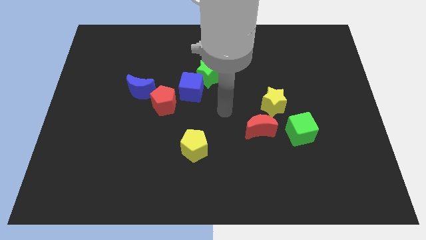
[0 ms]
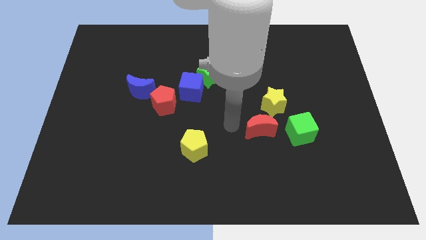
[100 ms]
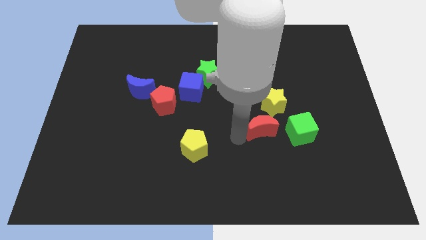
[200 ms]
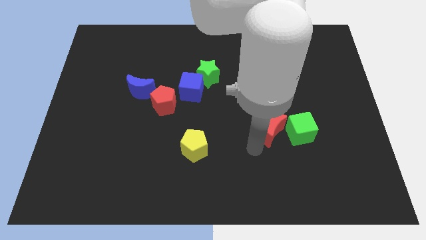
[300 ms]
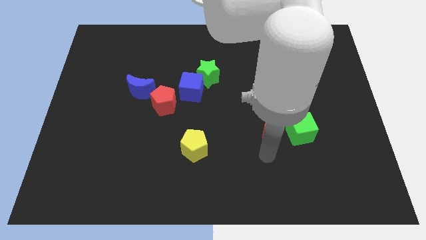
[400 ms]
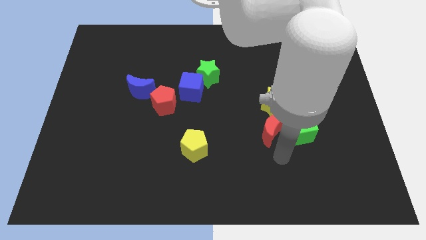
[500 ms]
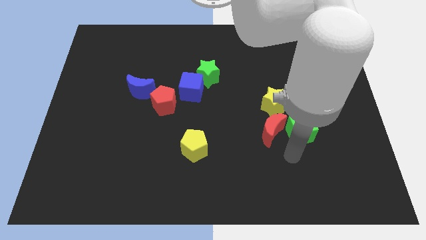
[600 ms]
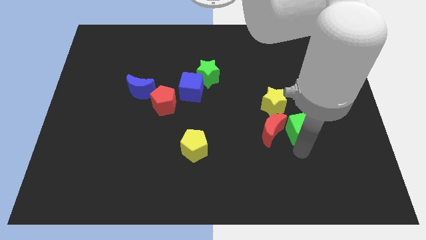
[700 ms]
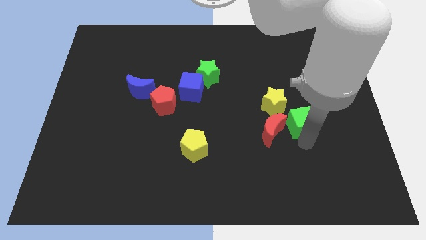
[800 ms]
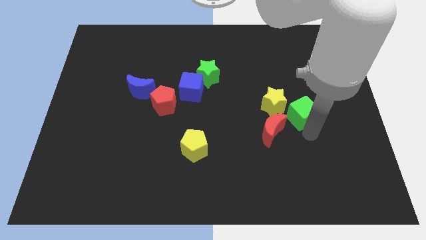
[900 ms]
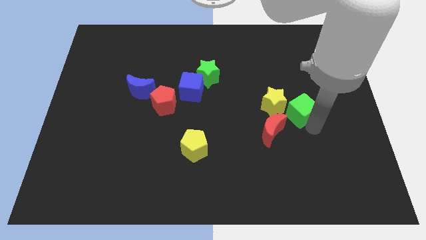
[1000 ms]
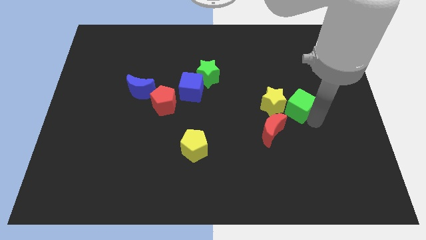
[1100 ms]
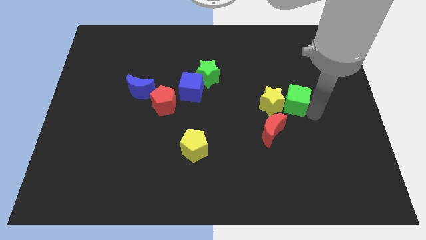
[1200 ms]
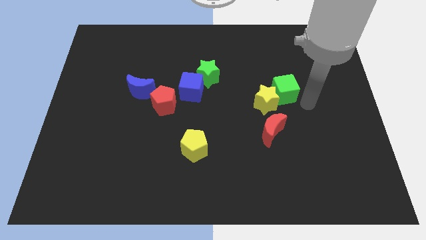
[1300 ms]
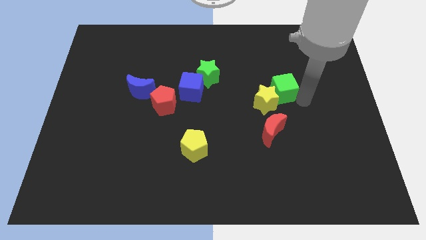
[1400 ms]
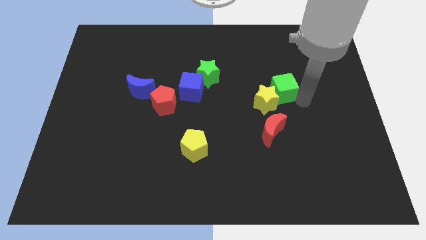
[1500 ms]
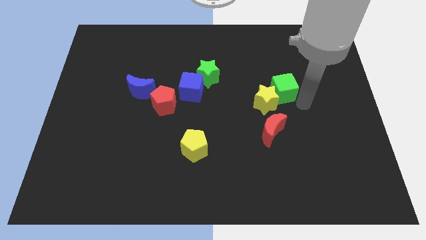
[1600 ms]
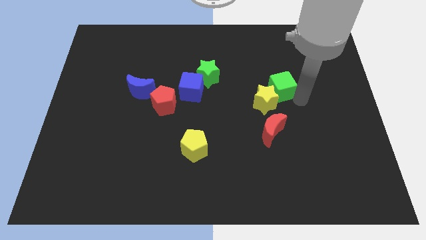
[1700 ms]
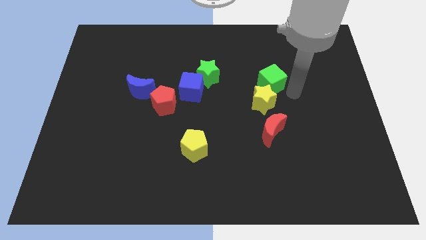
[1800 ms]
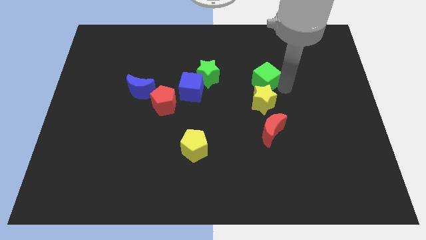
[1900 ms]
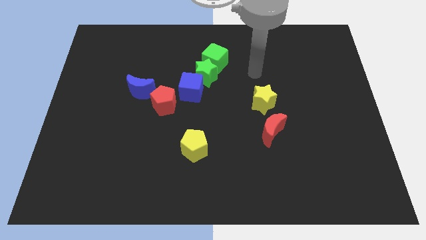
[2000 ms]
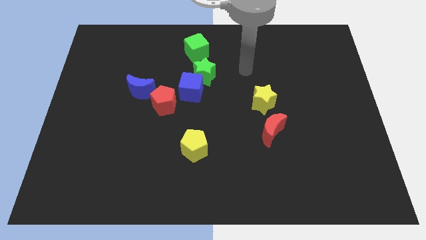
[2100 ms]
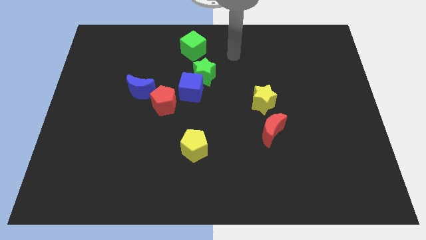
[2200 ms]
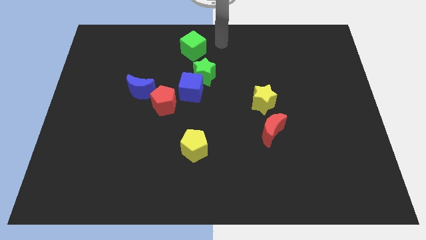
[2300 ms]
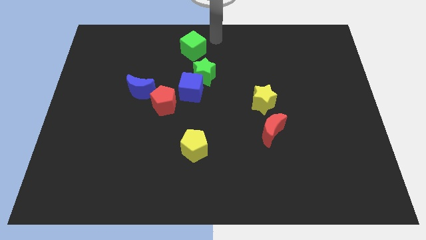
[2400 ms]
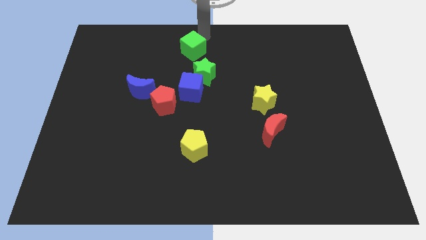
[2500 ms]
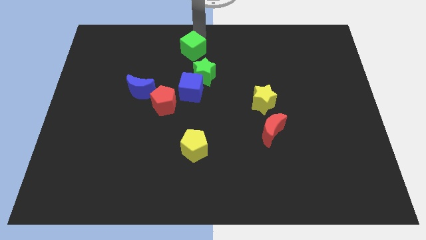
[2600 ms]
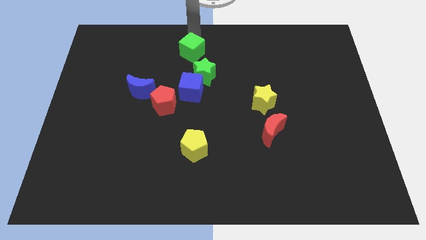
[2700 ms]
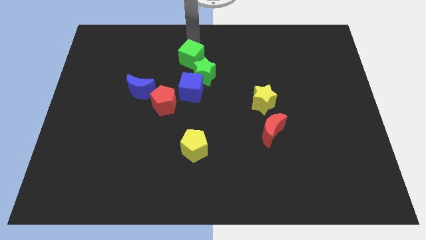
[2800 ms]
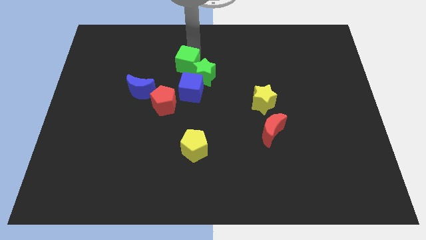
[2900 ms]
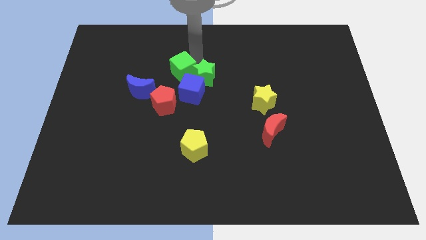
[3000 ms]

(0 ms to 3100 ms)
move the green cube towards the green star

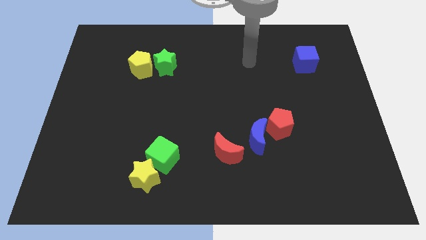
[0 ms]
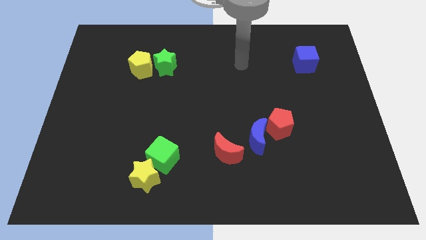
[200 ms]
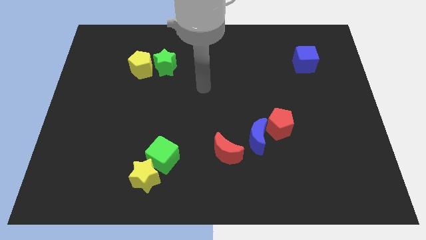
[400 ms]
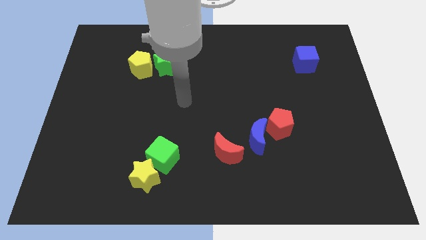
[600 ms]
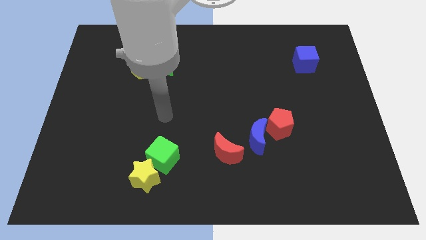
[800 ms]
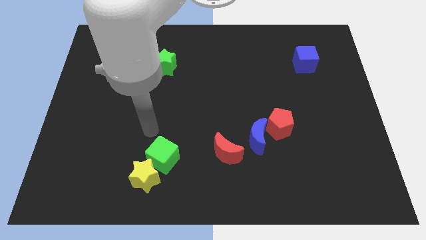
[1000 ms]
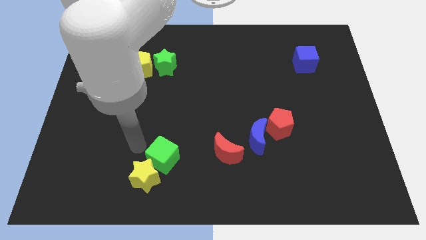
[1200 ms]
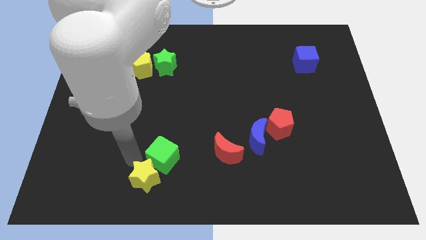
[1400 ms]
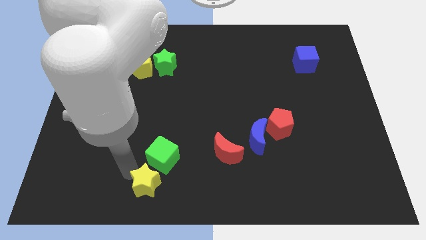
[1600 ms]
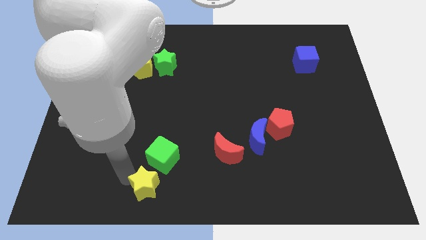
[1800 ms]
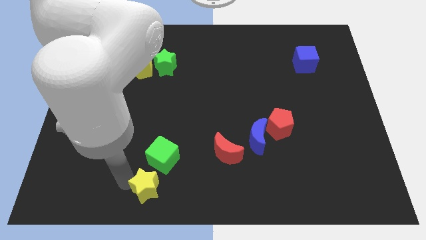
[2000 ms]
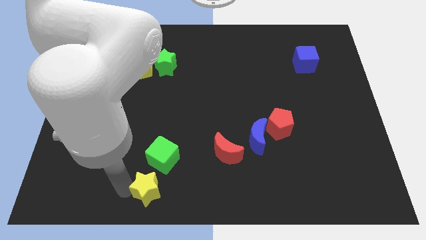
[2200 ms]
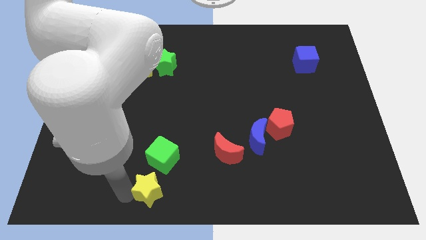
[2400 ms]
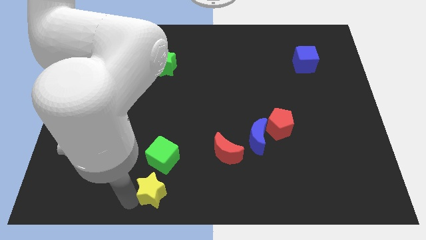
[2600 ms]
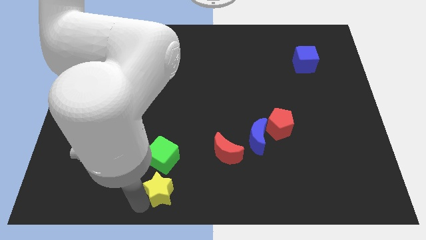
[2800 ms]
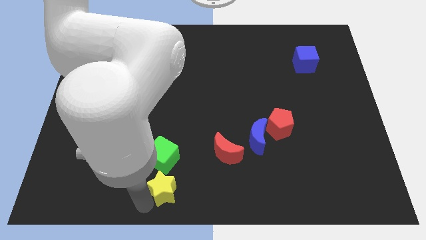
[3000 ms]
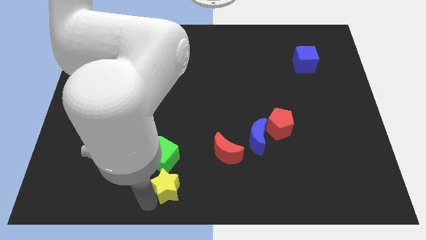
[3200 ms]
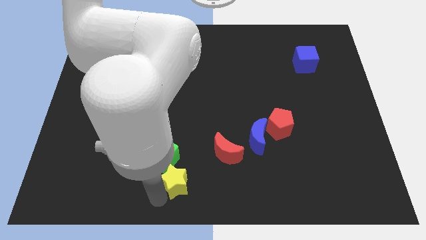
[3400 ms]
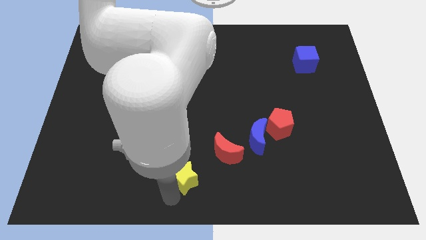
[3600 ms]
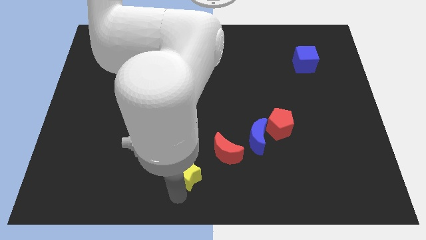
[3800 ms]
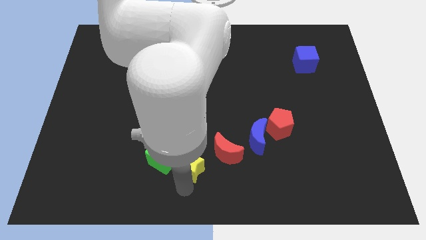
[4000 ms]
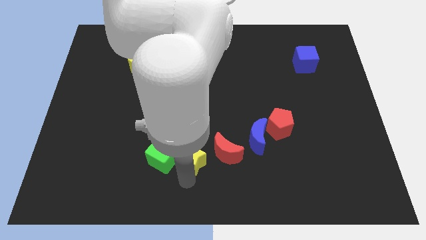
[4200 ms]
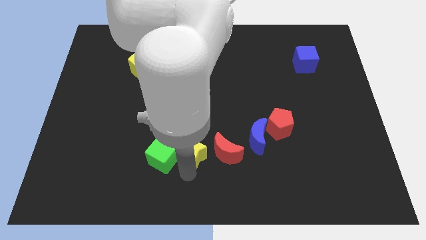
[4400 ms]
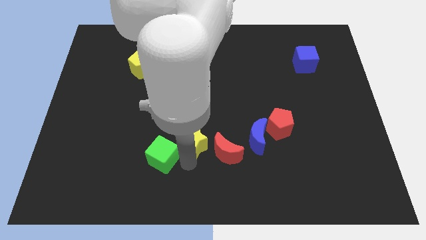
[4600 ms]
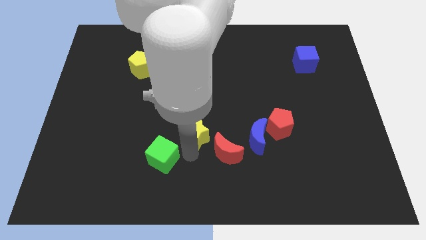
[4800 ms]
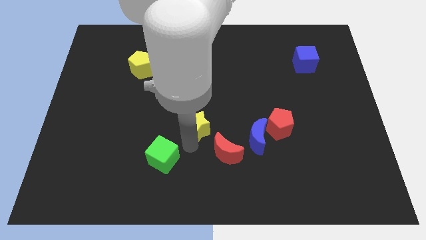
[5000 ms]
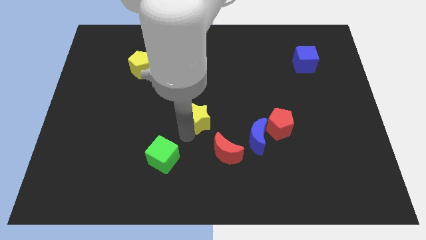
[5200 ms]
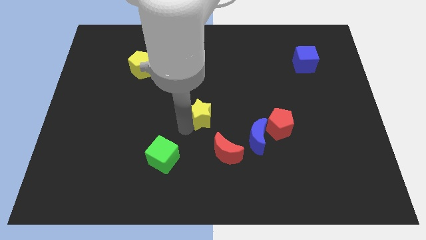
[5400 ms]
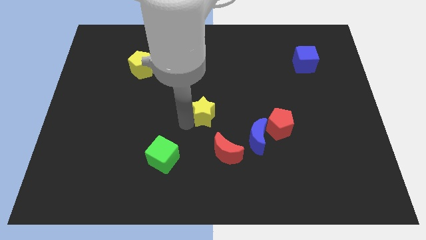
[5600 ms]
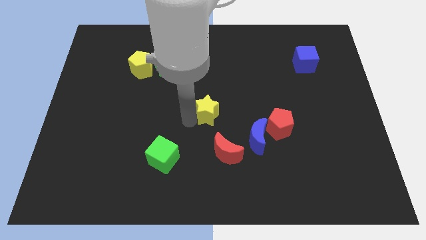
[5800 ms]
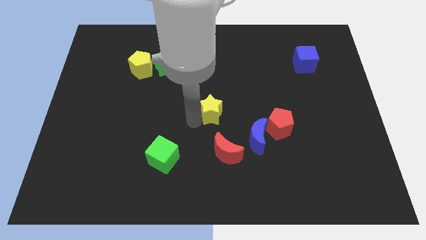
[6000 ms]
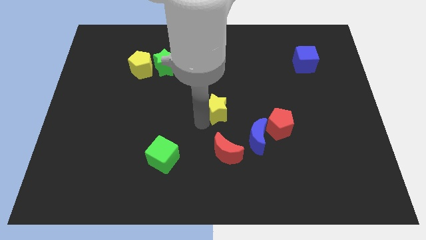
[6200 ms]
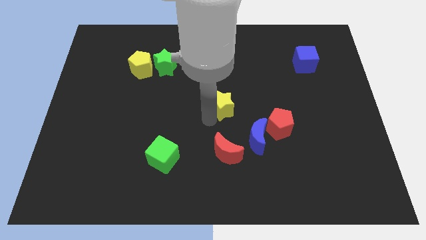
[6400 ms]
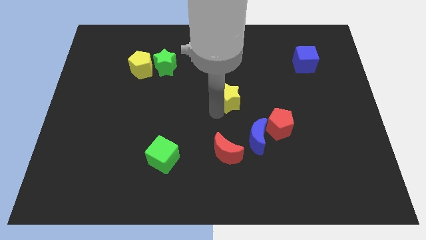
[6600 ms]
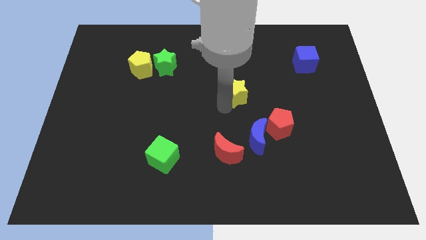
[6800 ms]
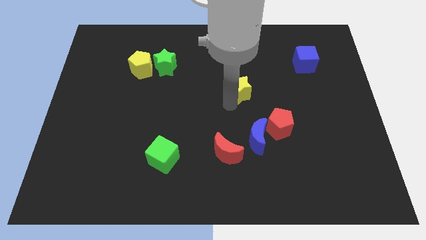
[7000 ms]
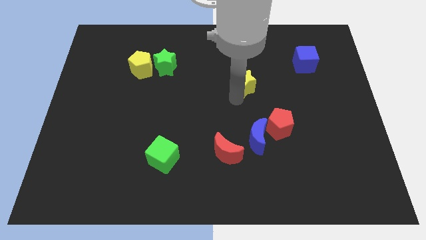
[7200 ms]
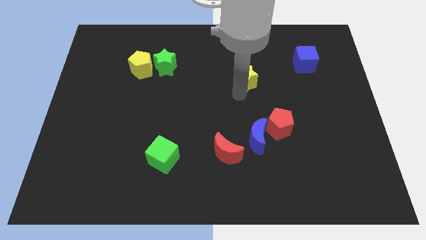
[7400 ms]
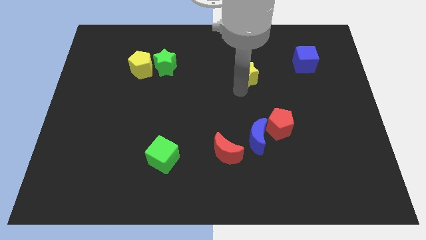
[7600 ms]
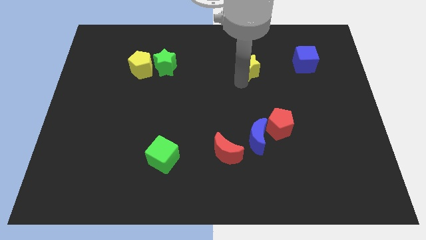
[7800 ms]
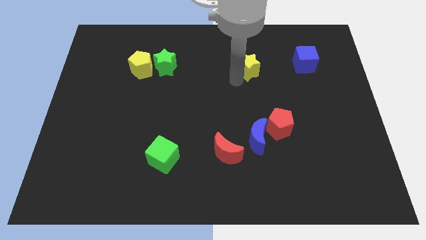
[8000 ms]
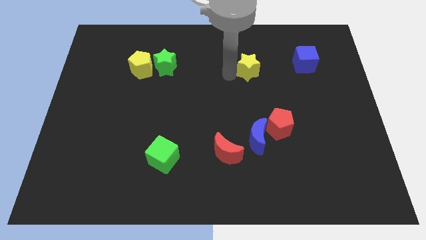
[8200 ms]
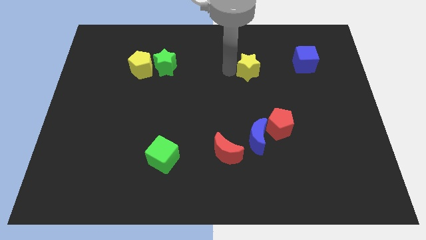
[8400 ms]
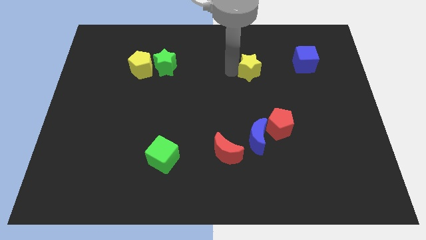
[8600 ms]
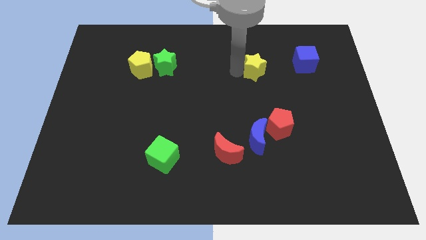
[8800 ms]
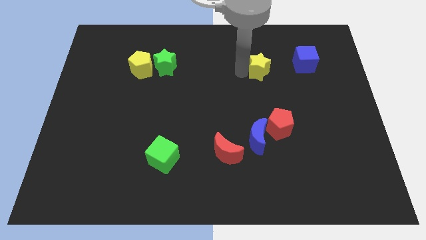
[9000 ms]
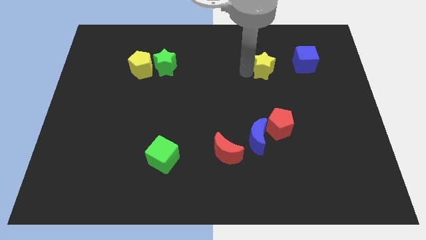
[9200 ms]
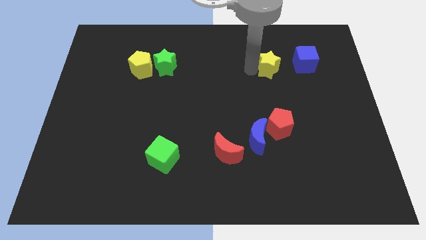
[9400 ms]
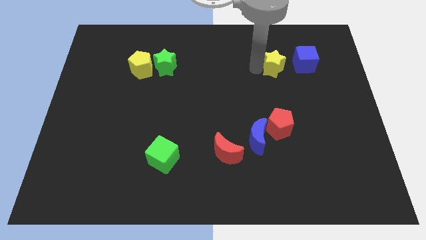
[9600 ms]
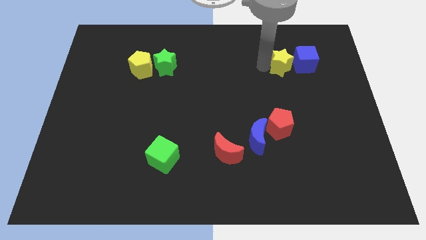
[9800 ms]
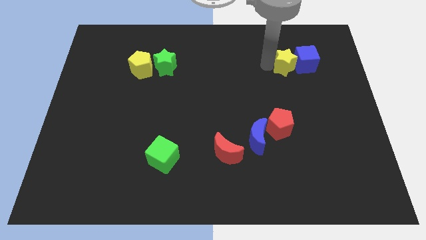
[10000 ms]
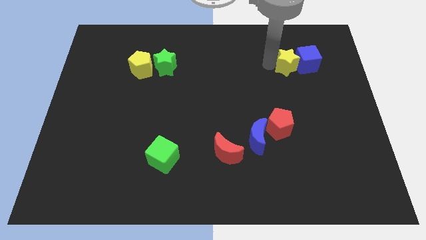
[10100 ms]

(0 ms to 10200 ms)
put the yellow star next to the blue cube

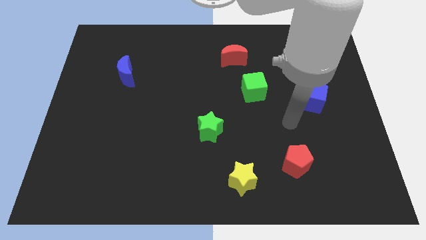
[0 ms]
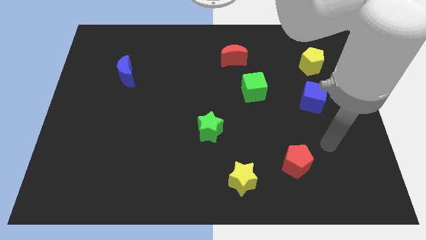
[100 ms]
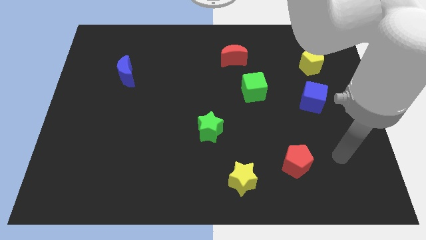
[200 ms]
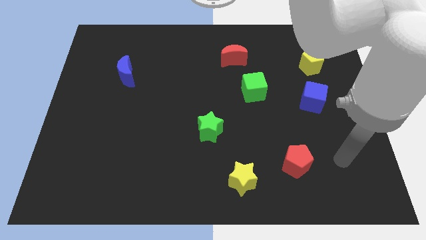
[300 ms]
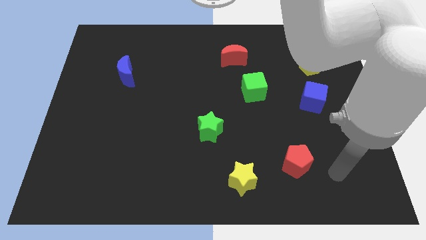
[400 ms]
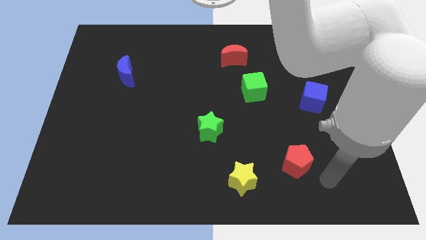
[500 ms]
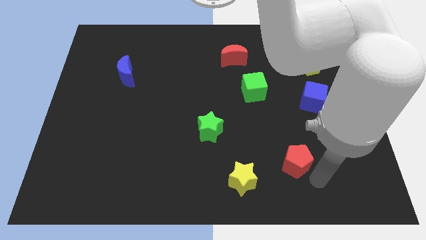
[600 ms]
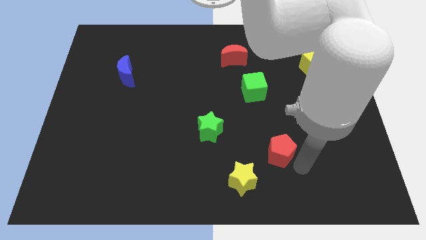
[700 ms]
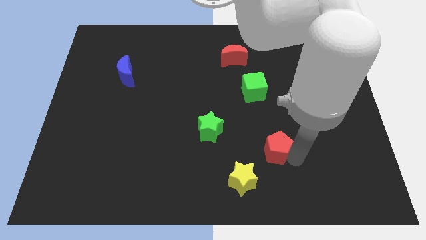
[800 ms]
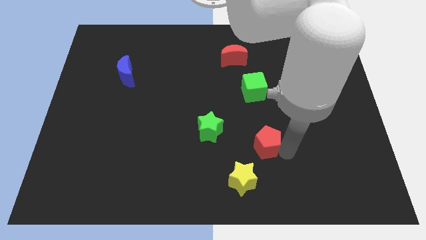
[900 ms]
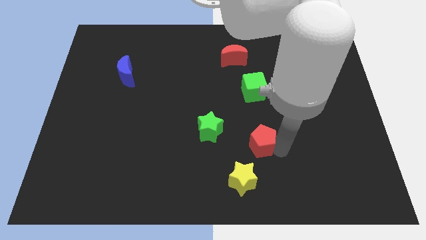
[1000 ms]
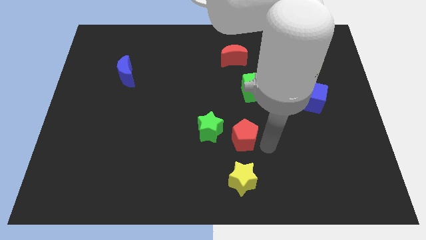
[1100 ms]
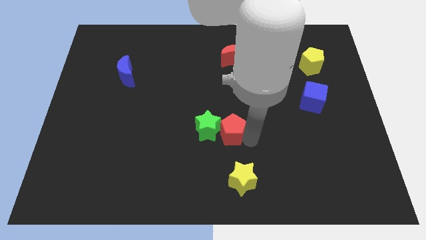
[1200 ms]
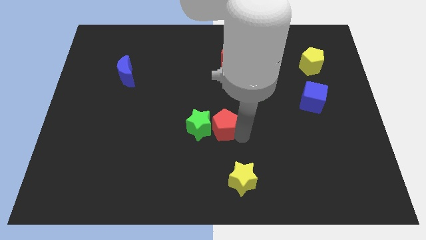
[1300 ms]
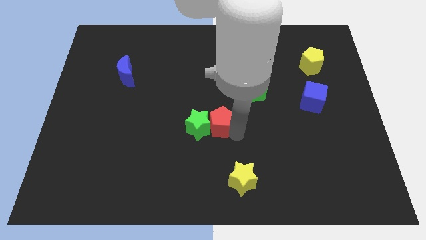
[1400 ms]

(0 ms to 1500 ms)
move the red pentagon to the green star
